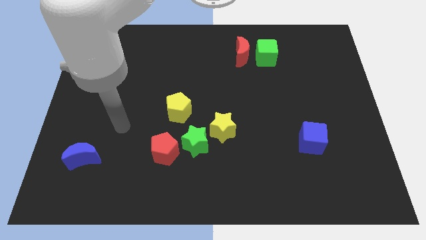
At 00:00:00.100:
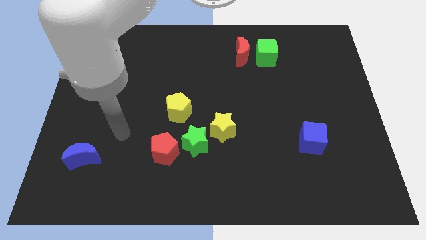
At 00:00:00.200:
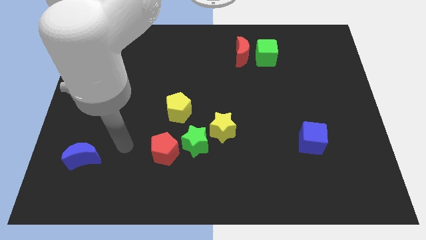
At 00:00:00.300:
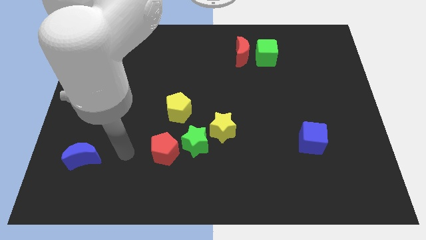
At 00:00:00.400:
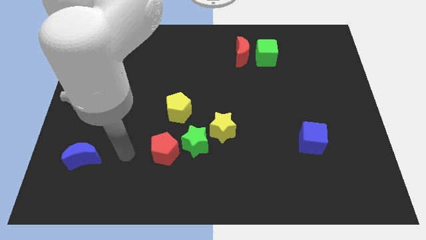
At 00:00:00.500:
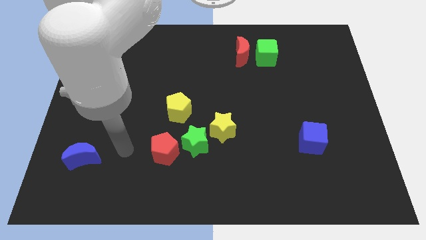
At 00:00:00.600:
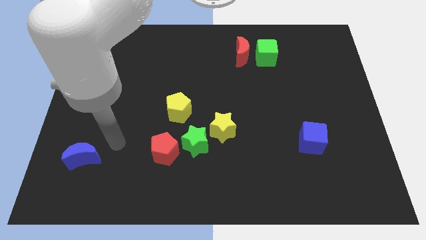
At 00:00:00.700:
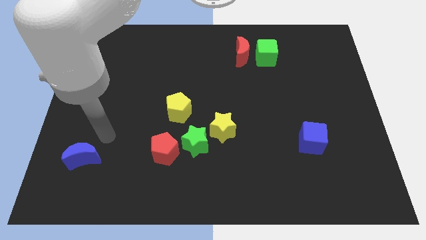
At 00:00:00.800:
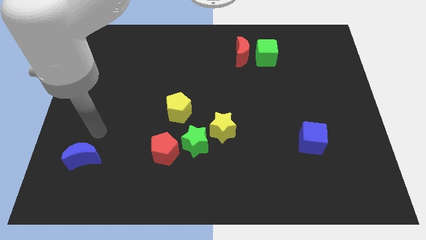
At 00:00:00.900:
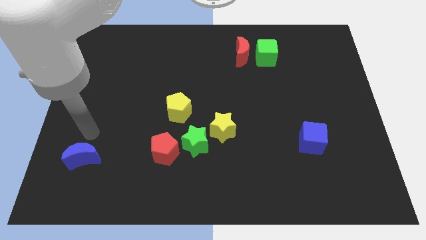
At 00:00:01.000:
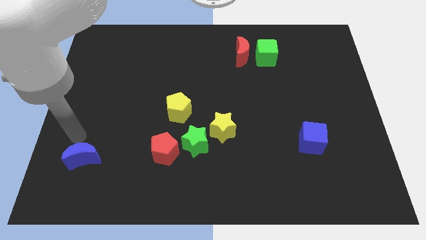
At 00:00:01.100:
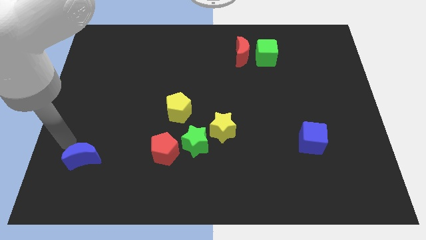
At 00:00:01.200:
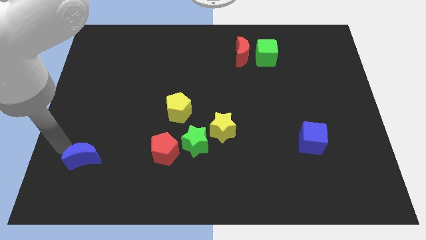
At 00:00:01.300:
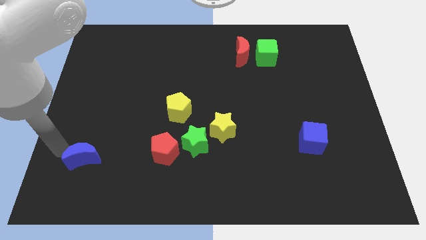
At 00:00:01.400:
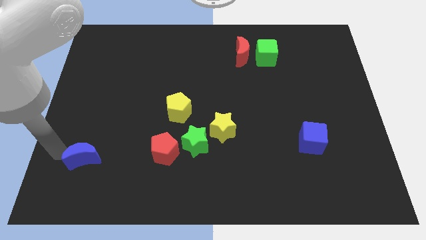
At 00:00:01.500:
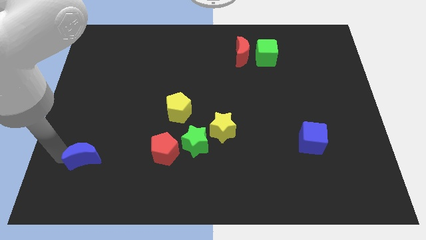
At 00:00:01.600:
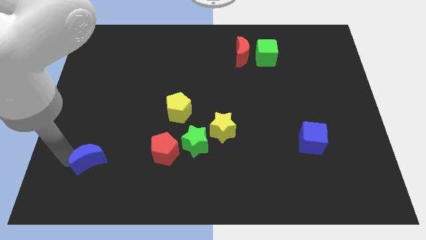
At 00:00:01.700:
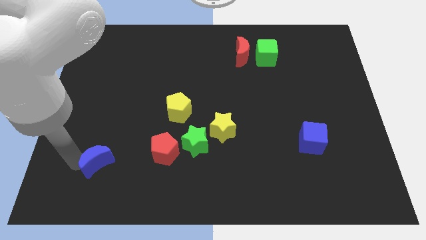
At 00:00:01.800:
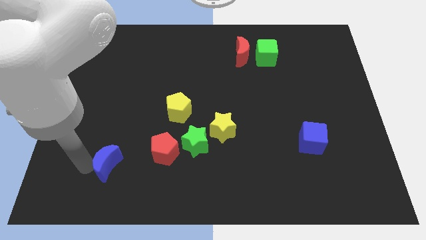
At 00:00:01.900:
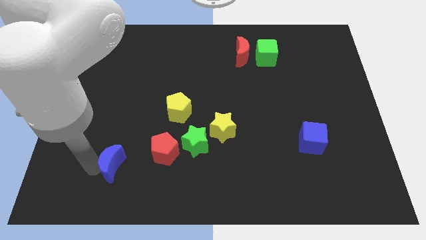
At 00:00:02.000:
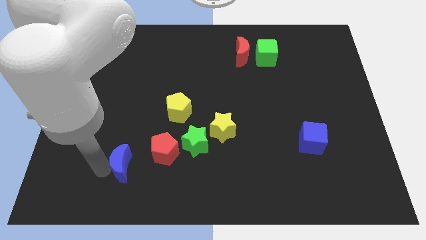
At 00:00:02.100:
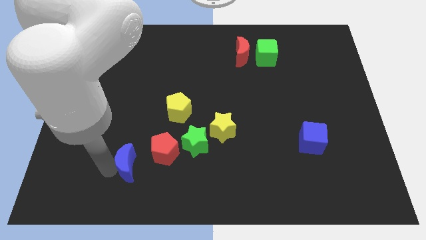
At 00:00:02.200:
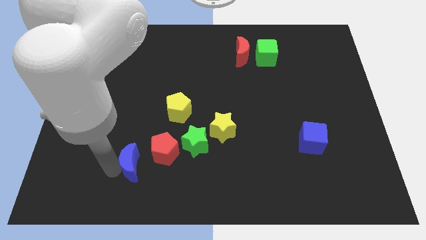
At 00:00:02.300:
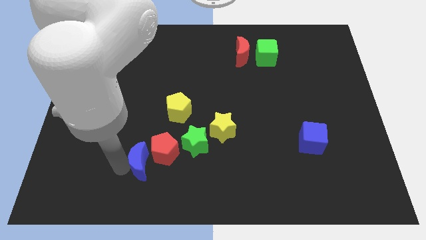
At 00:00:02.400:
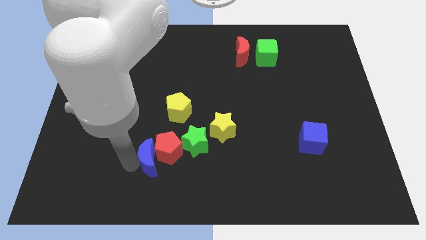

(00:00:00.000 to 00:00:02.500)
push blue moon towards red pentagon

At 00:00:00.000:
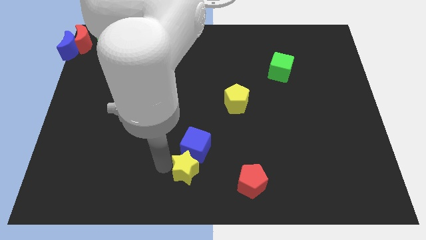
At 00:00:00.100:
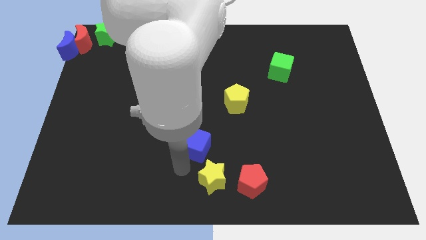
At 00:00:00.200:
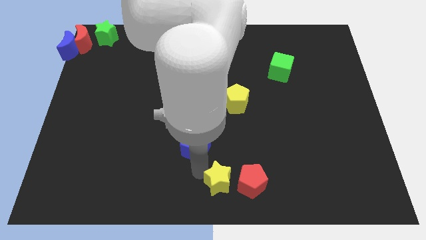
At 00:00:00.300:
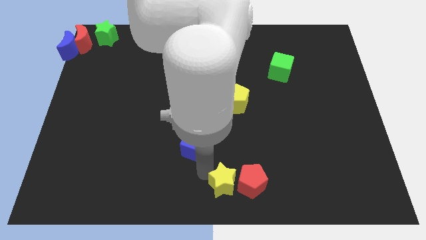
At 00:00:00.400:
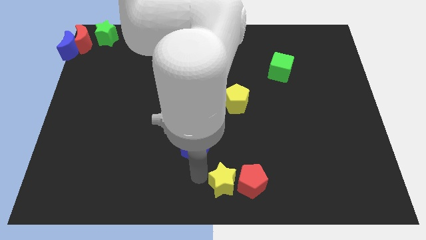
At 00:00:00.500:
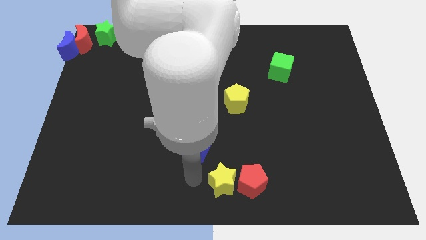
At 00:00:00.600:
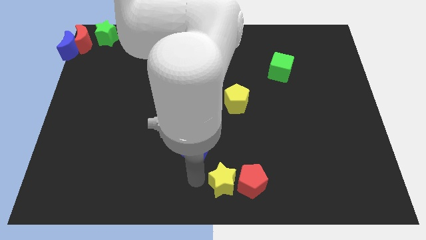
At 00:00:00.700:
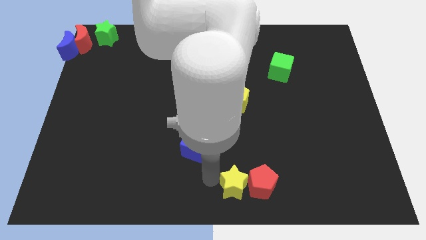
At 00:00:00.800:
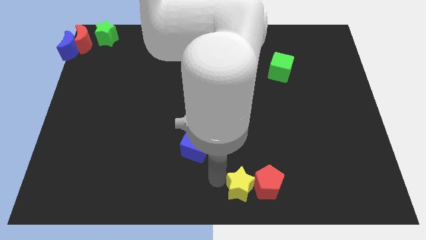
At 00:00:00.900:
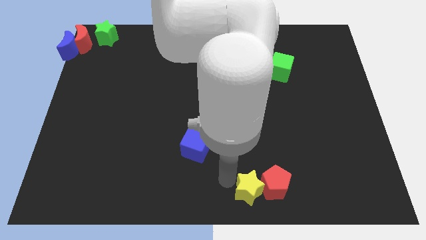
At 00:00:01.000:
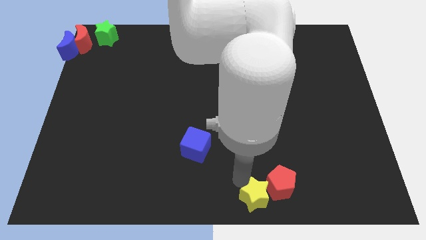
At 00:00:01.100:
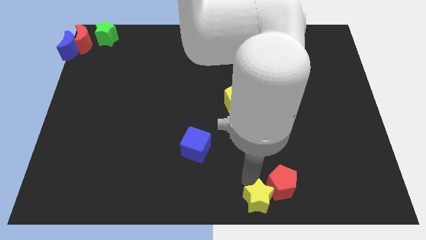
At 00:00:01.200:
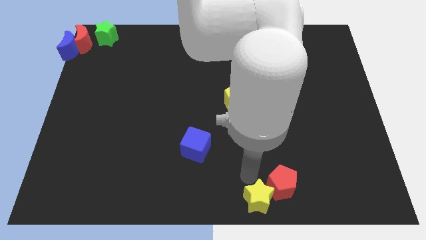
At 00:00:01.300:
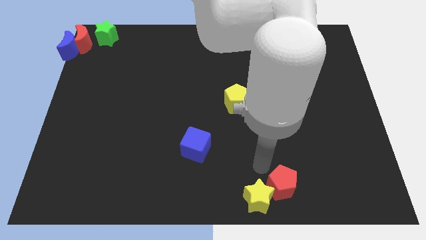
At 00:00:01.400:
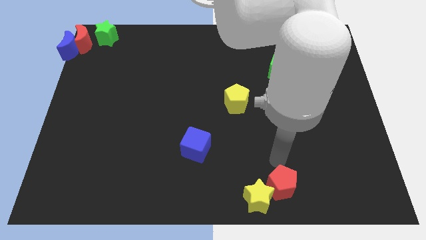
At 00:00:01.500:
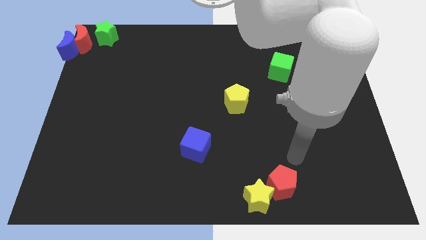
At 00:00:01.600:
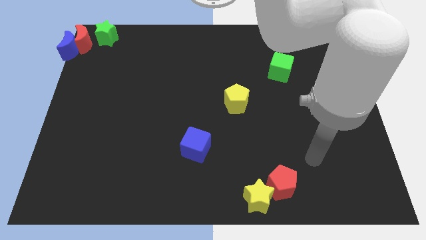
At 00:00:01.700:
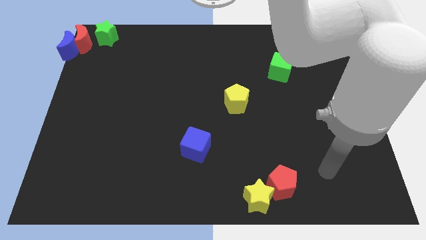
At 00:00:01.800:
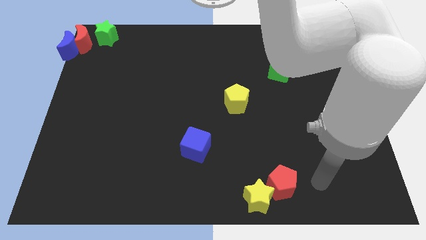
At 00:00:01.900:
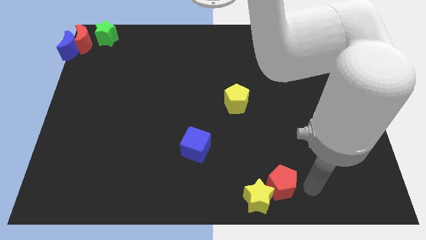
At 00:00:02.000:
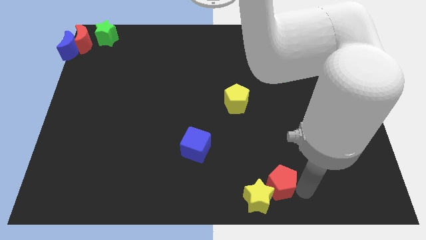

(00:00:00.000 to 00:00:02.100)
place the red pentagon and yellow star diagonally on the bottom right side of the blue cube

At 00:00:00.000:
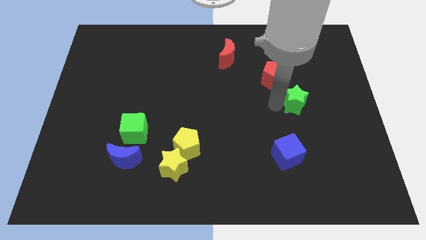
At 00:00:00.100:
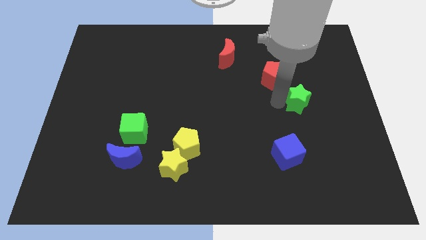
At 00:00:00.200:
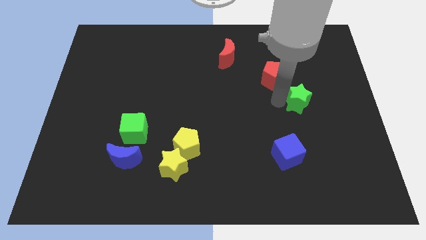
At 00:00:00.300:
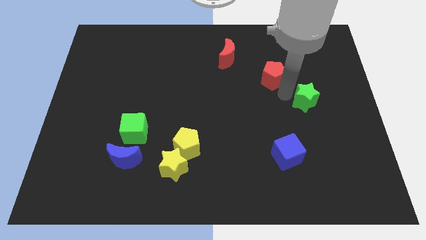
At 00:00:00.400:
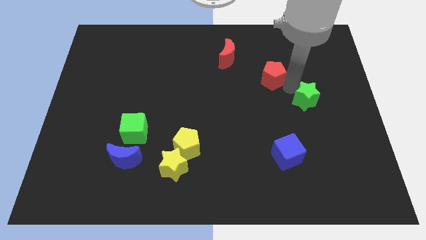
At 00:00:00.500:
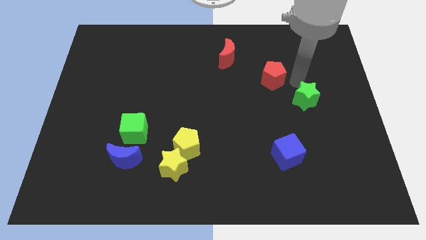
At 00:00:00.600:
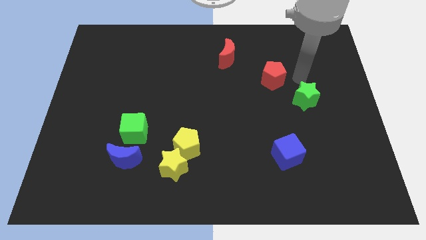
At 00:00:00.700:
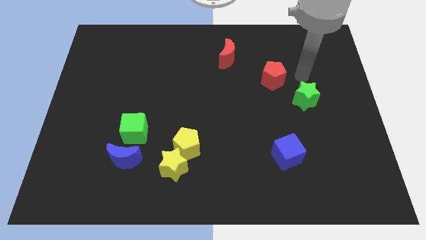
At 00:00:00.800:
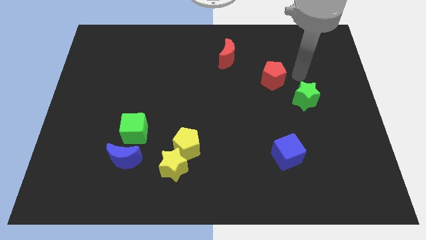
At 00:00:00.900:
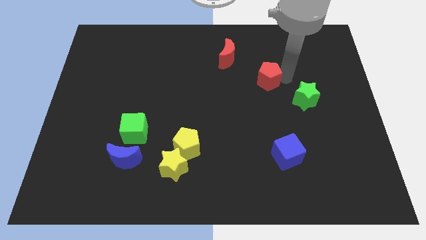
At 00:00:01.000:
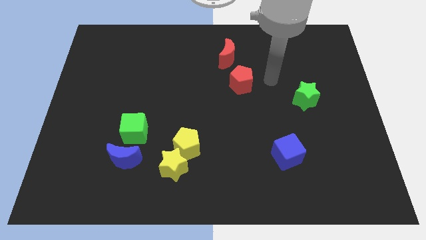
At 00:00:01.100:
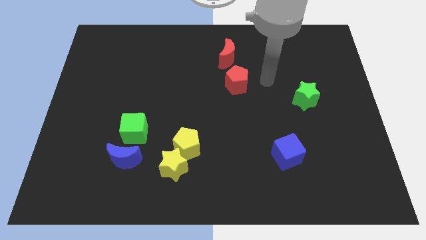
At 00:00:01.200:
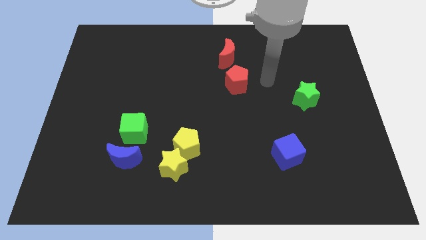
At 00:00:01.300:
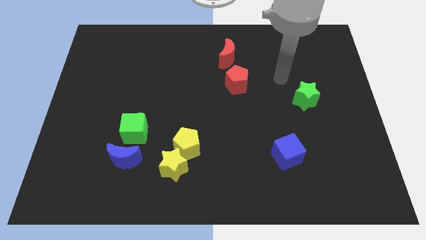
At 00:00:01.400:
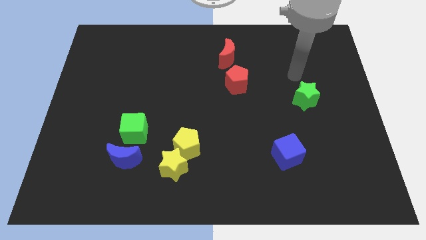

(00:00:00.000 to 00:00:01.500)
push the red pentagon down to the red crescent

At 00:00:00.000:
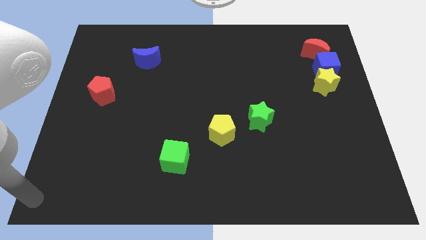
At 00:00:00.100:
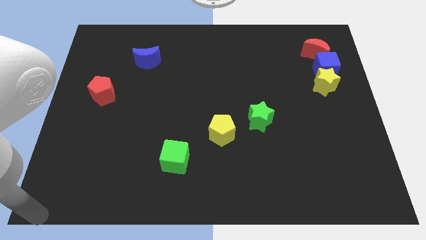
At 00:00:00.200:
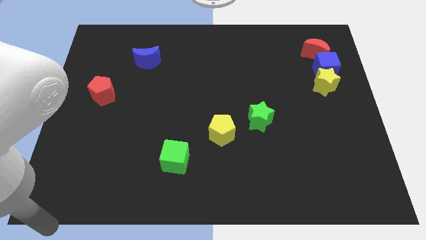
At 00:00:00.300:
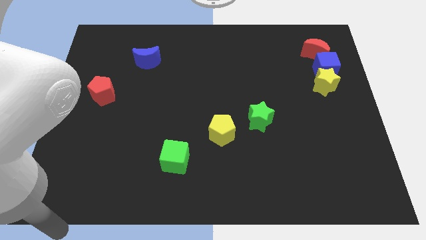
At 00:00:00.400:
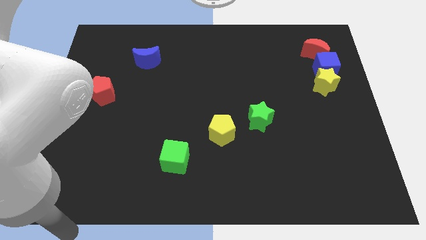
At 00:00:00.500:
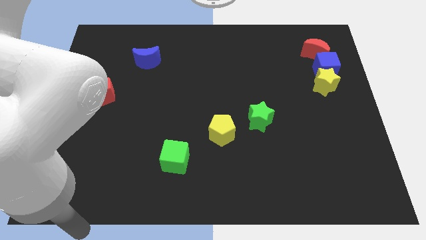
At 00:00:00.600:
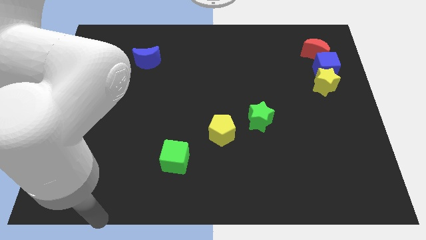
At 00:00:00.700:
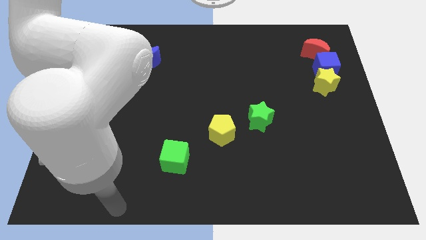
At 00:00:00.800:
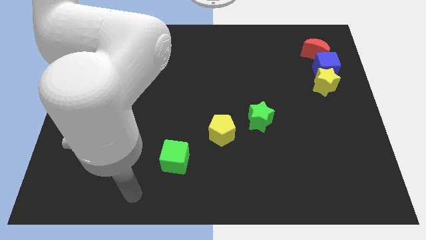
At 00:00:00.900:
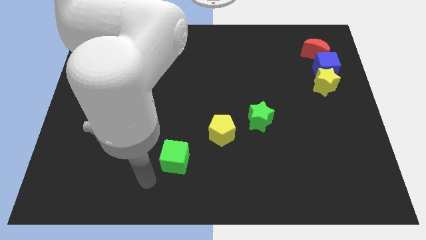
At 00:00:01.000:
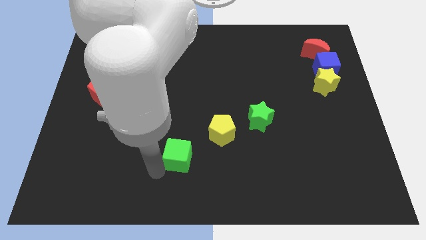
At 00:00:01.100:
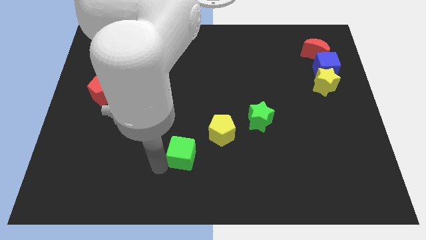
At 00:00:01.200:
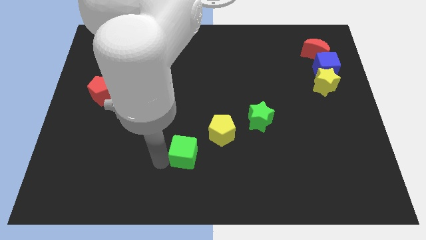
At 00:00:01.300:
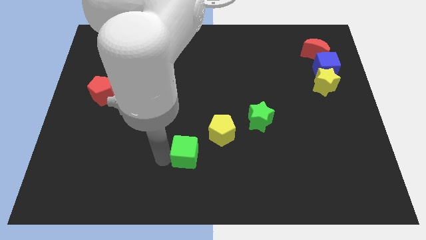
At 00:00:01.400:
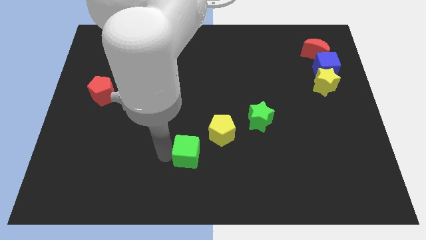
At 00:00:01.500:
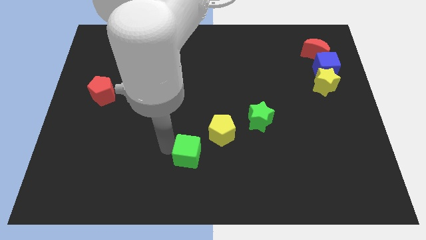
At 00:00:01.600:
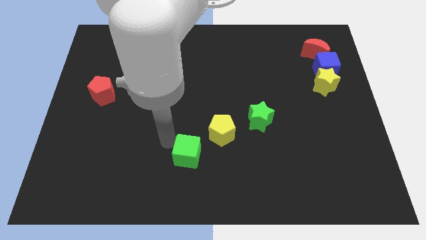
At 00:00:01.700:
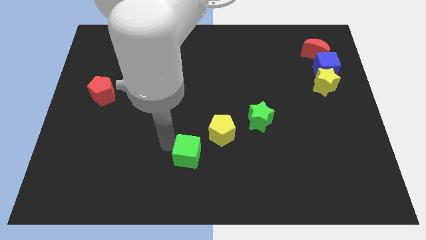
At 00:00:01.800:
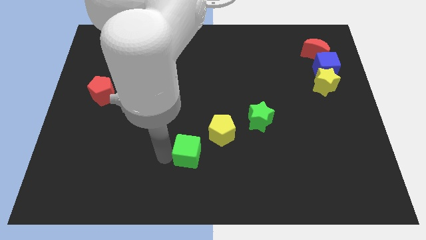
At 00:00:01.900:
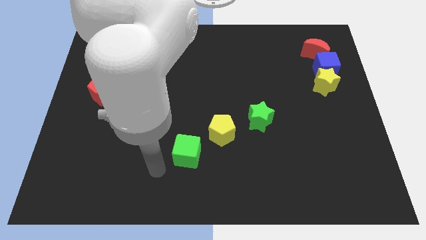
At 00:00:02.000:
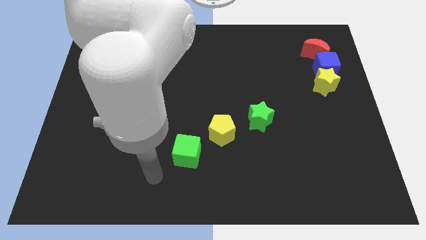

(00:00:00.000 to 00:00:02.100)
push green cube towards yellow pentagon

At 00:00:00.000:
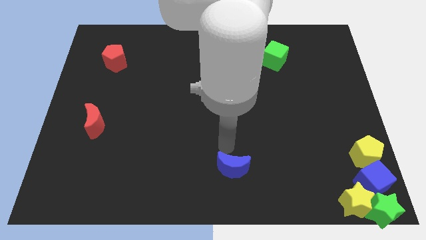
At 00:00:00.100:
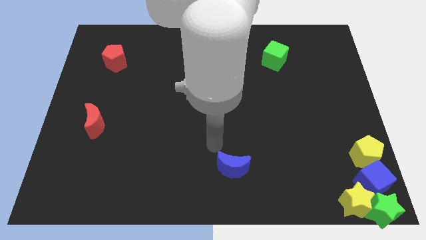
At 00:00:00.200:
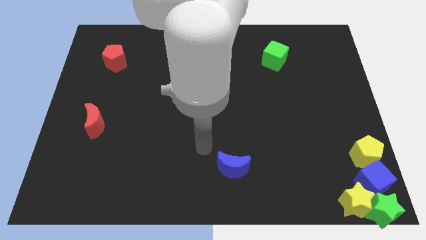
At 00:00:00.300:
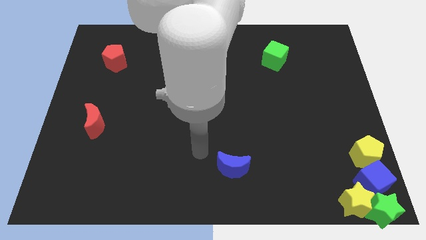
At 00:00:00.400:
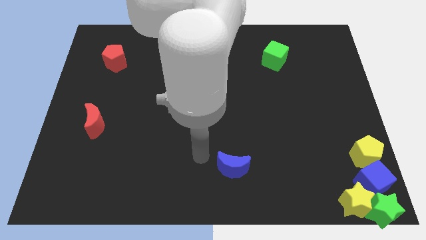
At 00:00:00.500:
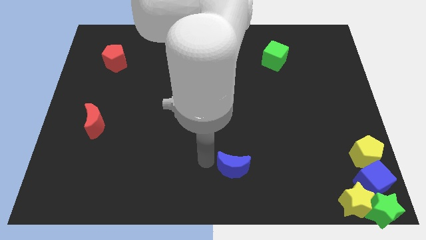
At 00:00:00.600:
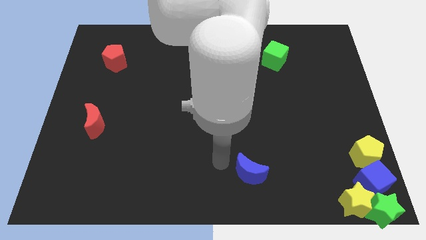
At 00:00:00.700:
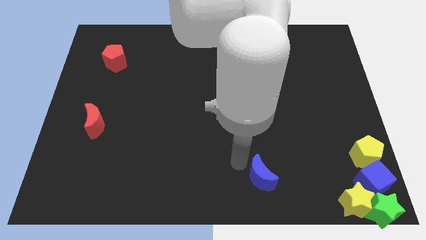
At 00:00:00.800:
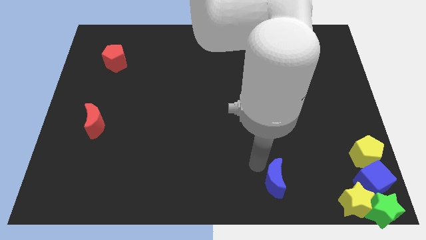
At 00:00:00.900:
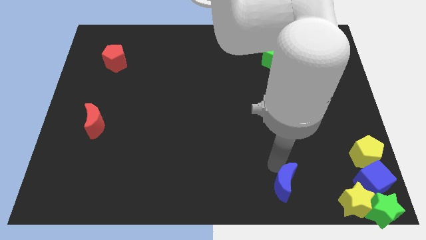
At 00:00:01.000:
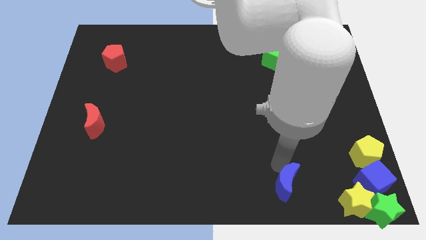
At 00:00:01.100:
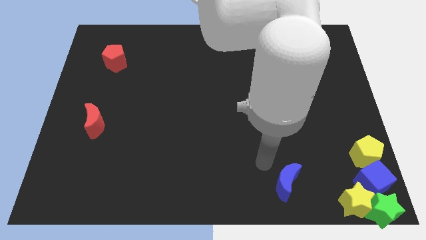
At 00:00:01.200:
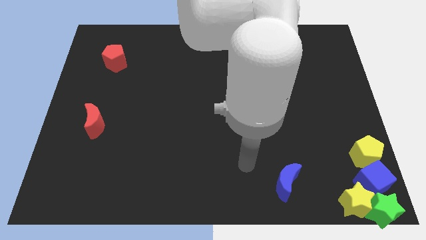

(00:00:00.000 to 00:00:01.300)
push the blue crescent slightly to the right side of the board
